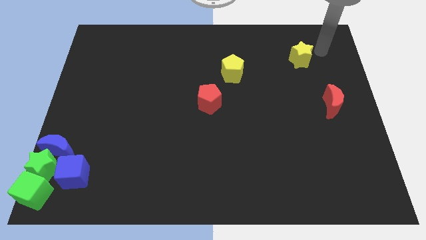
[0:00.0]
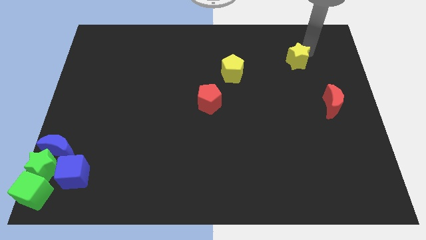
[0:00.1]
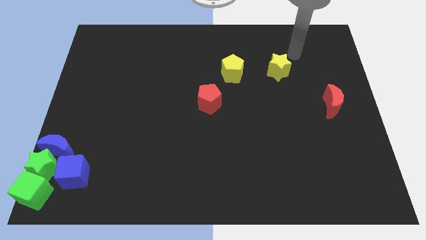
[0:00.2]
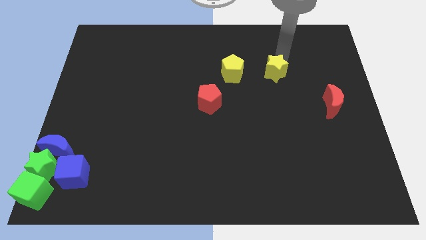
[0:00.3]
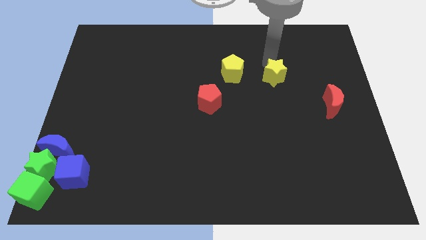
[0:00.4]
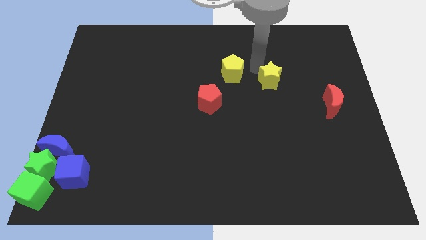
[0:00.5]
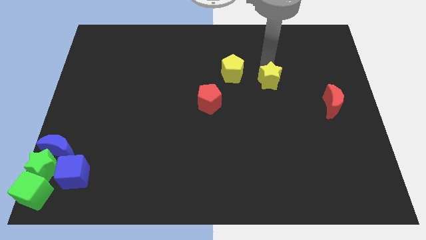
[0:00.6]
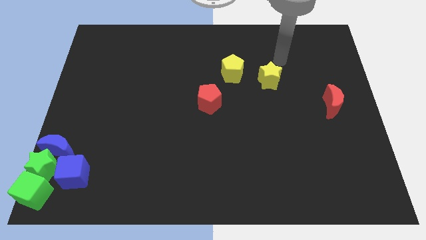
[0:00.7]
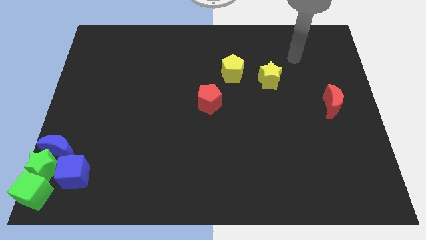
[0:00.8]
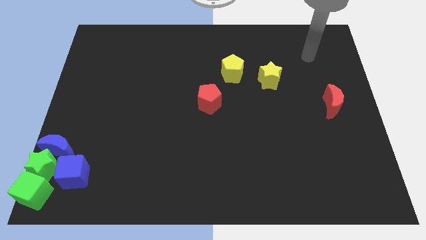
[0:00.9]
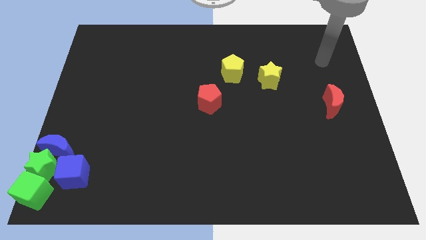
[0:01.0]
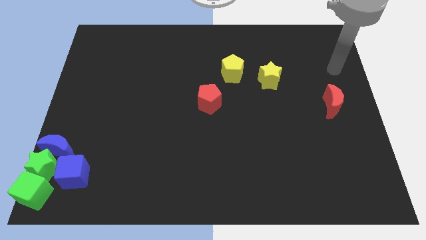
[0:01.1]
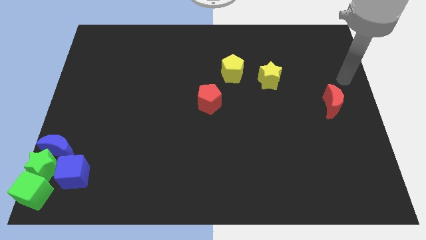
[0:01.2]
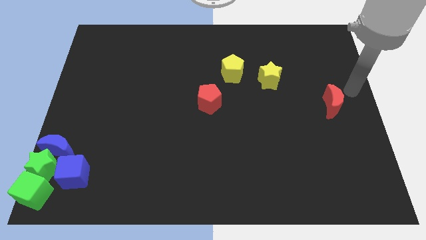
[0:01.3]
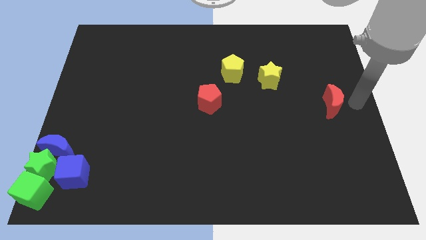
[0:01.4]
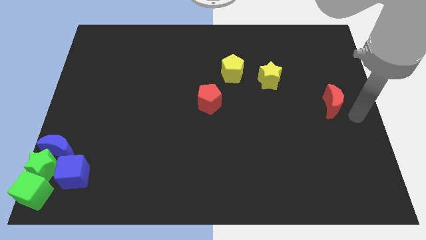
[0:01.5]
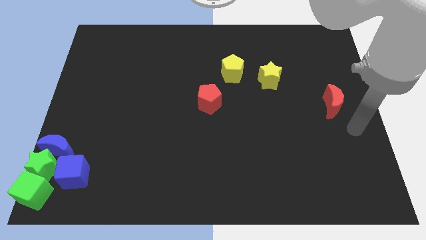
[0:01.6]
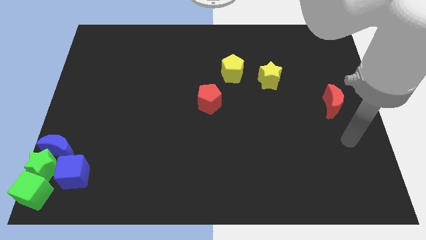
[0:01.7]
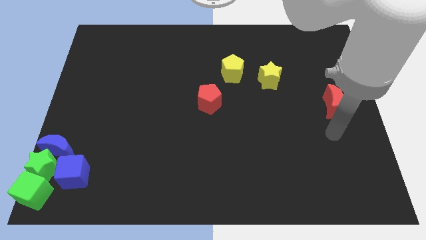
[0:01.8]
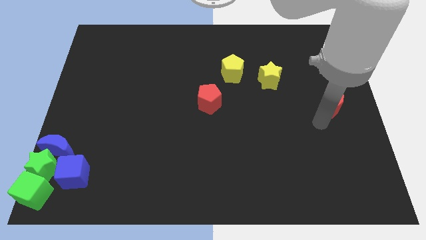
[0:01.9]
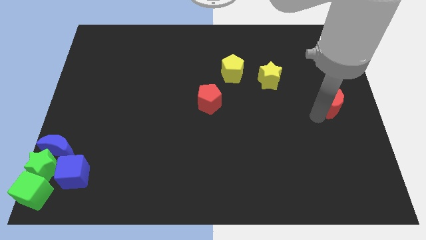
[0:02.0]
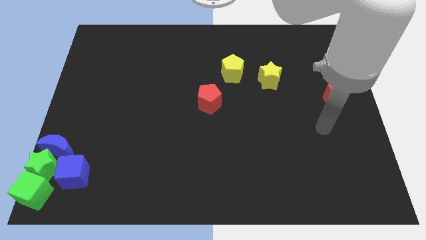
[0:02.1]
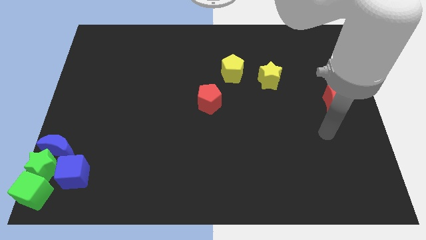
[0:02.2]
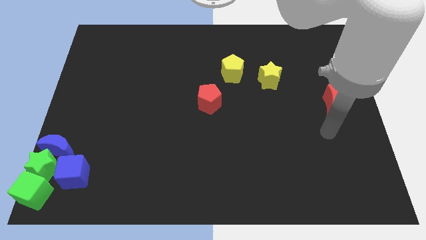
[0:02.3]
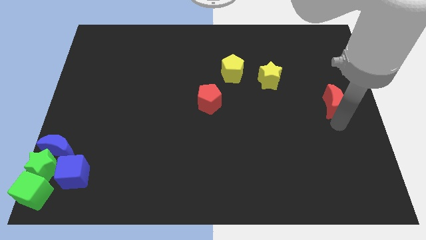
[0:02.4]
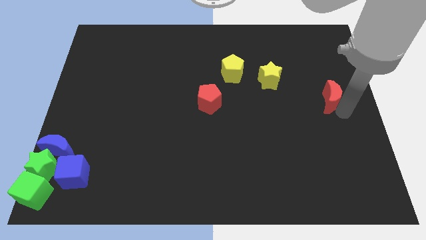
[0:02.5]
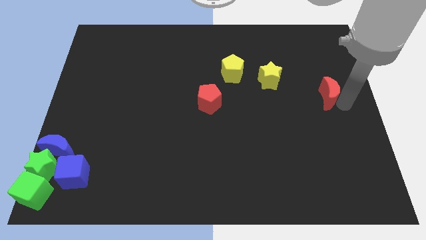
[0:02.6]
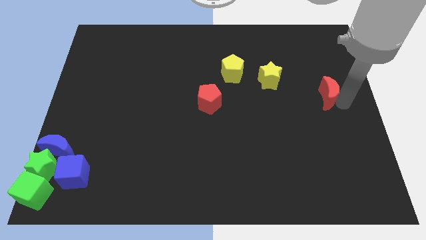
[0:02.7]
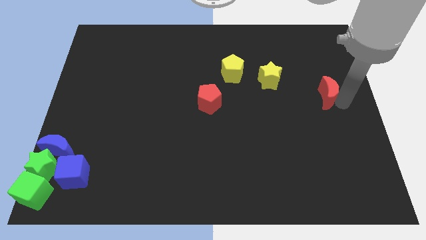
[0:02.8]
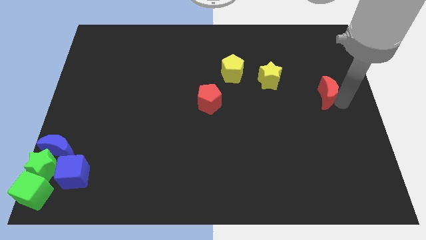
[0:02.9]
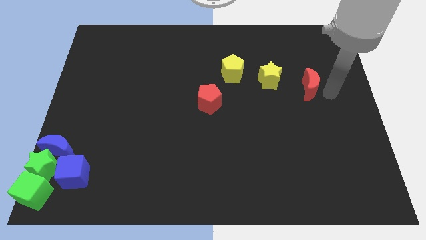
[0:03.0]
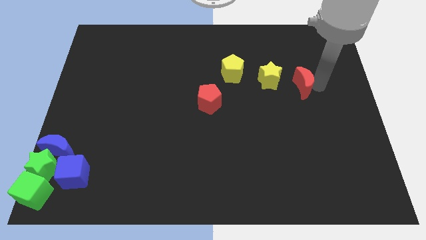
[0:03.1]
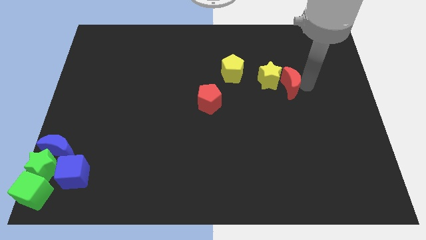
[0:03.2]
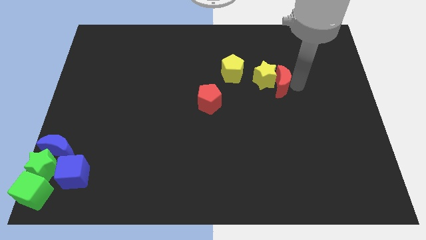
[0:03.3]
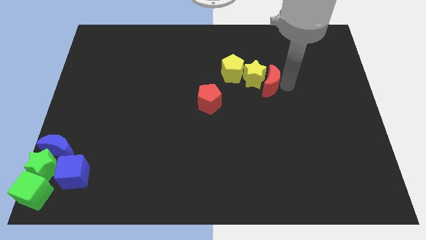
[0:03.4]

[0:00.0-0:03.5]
put the red moon into the yellow star

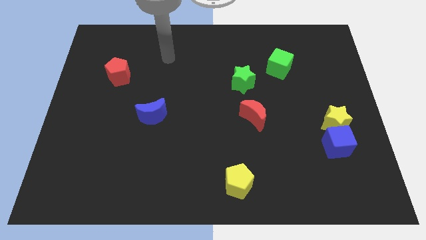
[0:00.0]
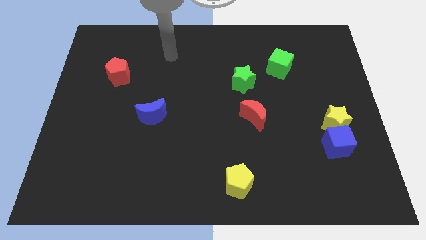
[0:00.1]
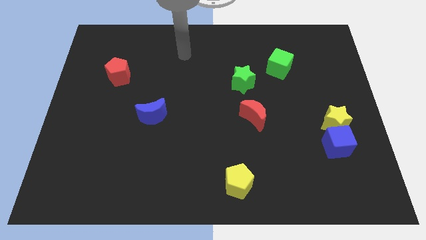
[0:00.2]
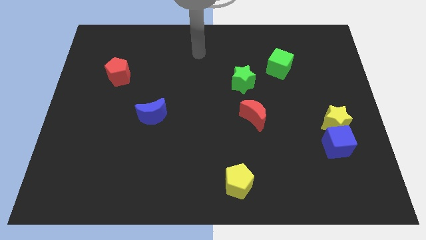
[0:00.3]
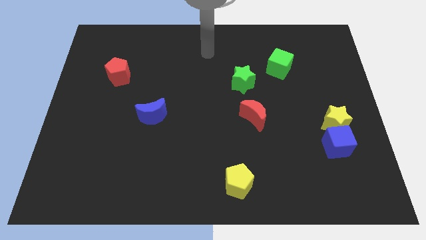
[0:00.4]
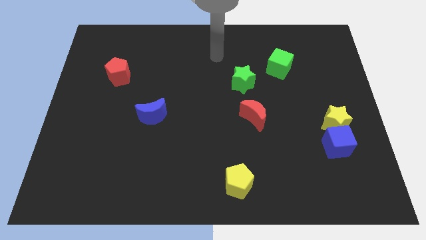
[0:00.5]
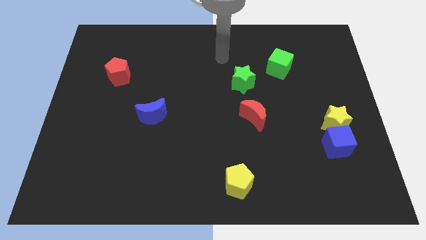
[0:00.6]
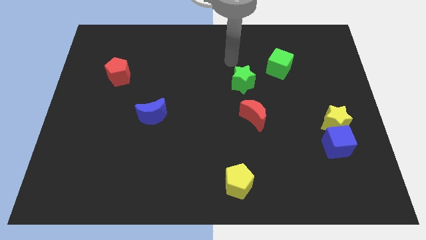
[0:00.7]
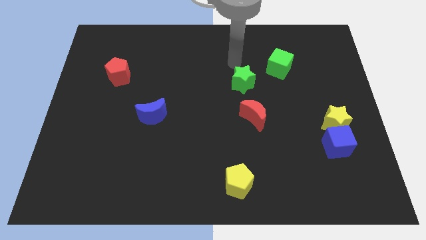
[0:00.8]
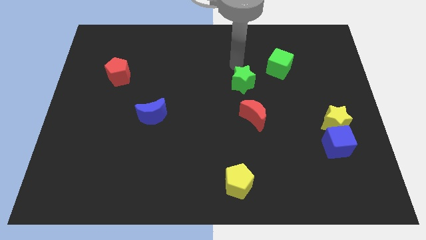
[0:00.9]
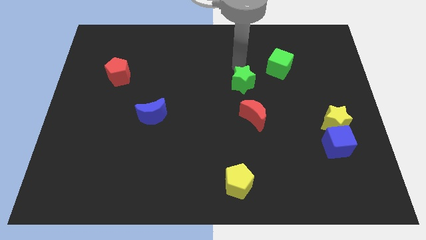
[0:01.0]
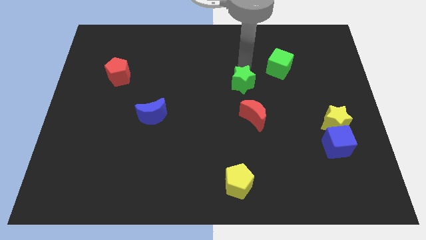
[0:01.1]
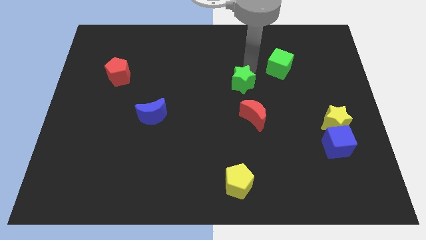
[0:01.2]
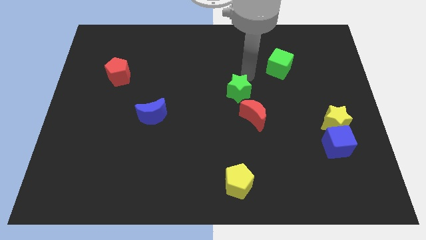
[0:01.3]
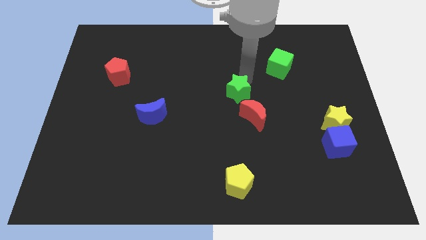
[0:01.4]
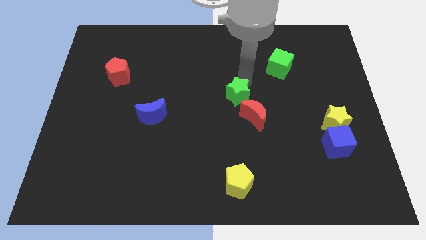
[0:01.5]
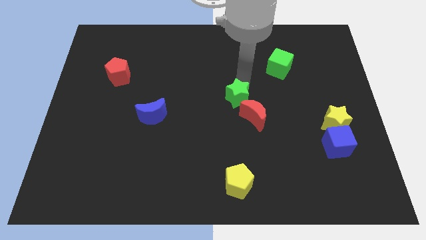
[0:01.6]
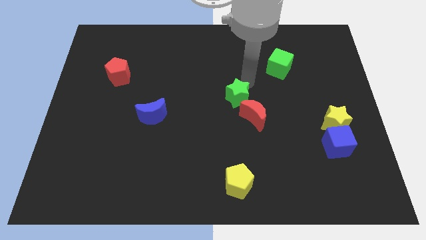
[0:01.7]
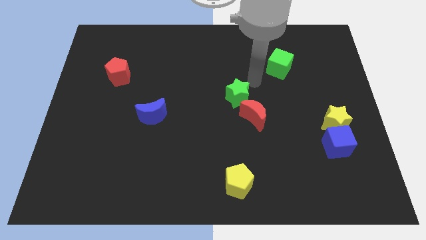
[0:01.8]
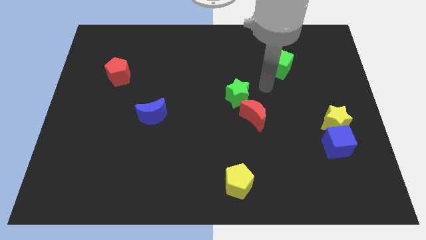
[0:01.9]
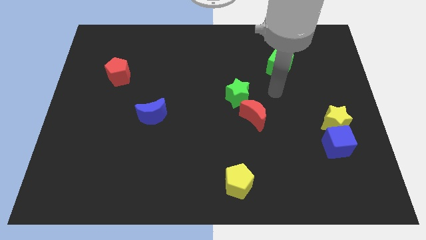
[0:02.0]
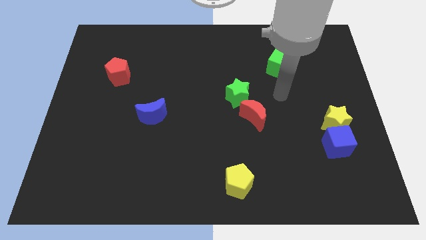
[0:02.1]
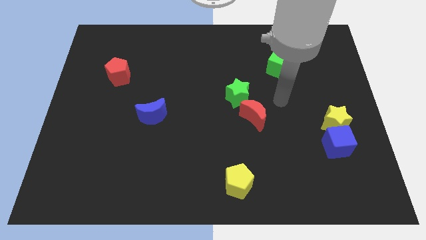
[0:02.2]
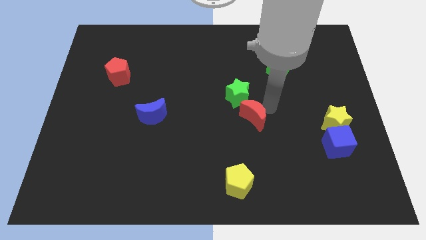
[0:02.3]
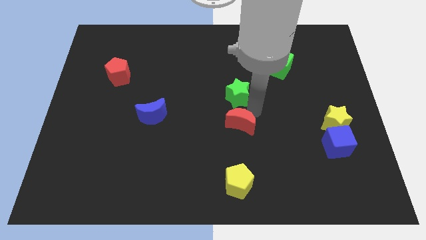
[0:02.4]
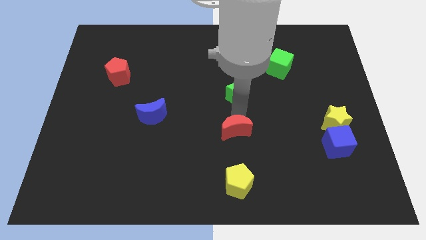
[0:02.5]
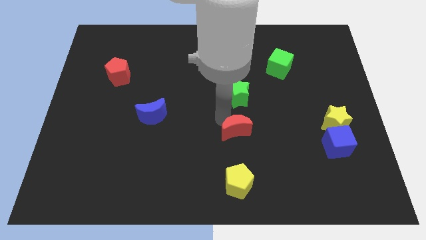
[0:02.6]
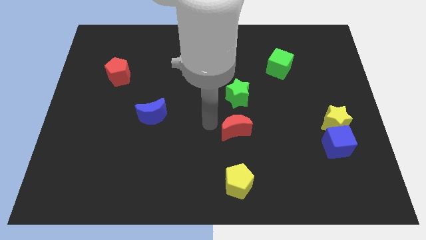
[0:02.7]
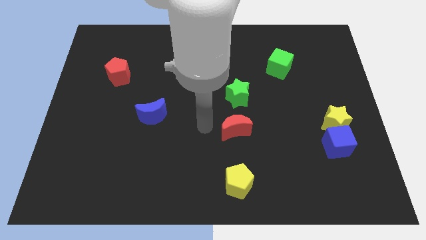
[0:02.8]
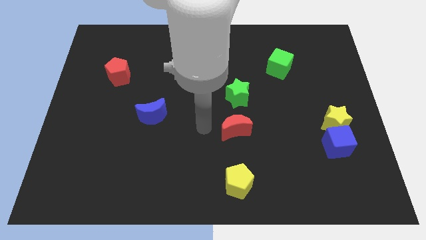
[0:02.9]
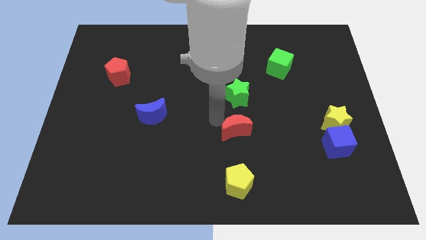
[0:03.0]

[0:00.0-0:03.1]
adjust the green star and red moon in a vertical line above the yellow pentagon

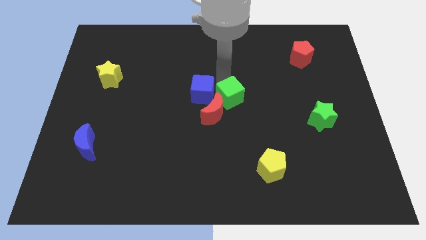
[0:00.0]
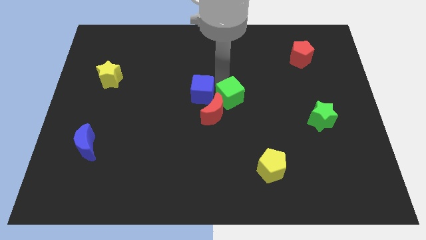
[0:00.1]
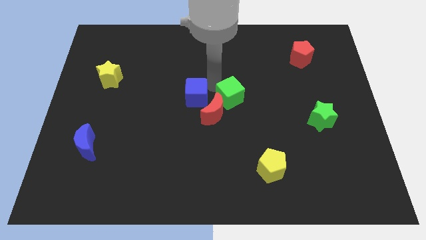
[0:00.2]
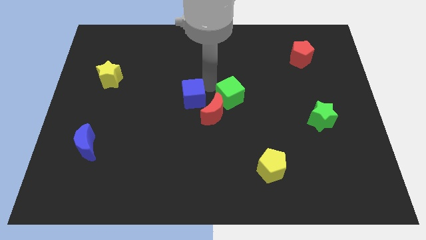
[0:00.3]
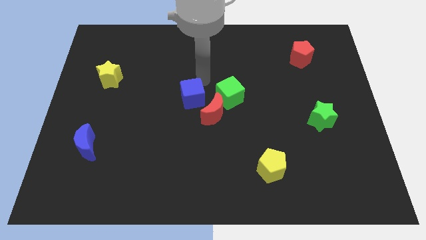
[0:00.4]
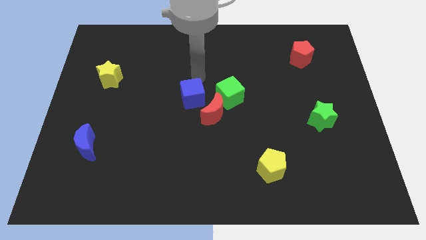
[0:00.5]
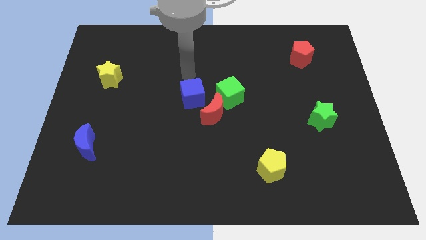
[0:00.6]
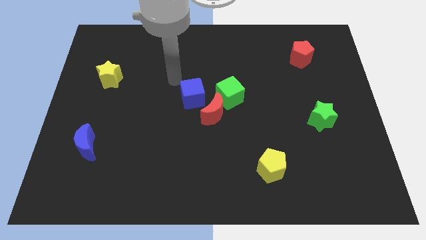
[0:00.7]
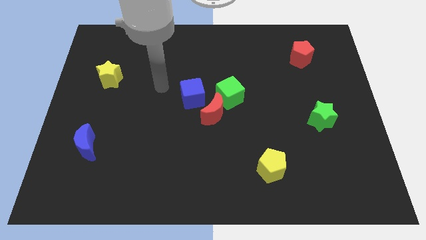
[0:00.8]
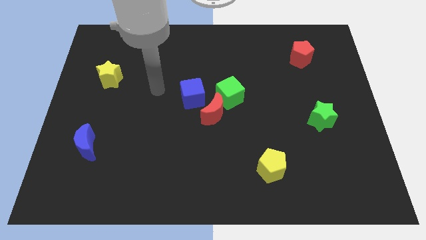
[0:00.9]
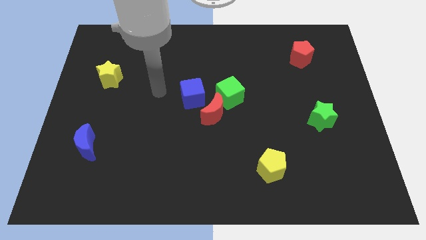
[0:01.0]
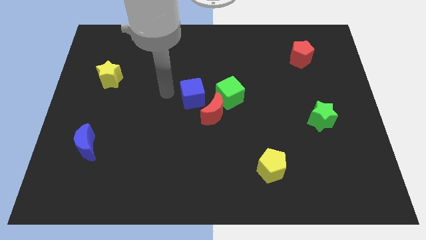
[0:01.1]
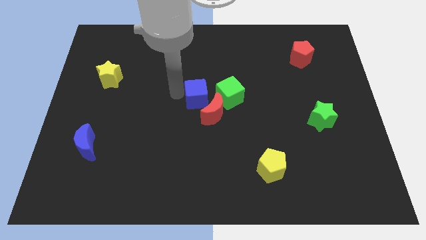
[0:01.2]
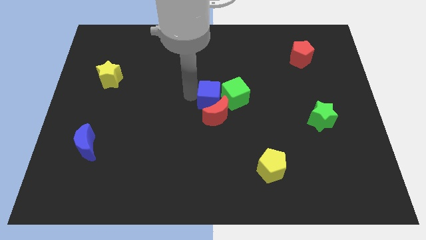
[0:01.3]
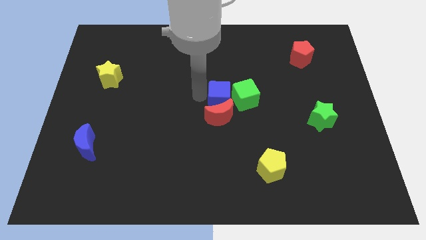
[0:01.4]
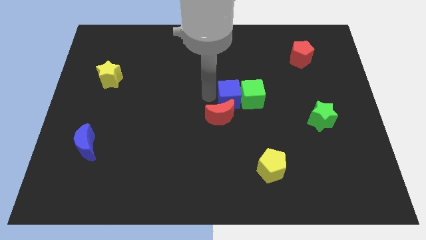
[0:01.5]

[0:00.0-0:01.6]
move the blue cube into the green cube

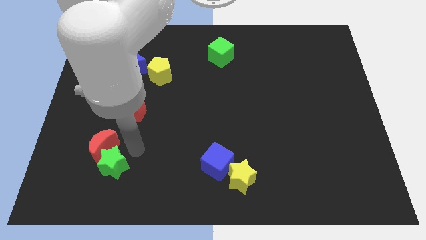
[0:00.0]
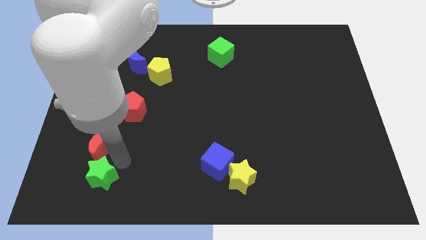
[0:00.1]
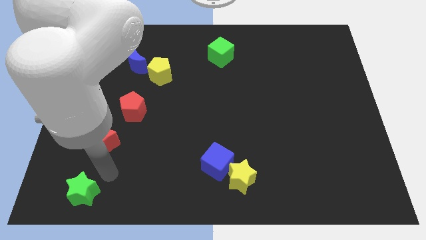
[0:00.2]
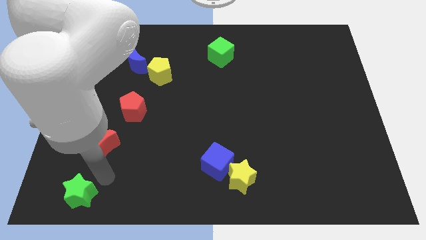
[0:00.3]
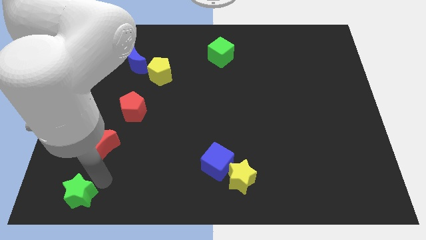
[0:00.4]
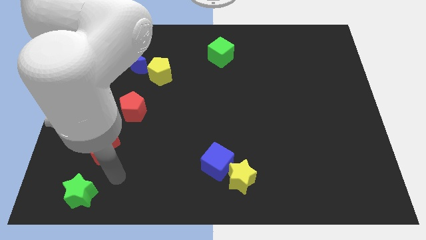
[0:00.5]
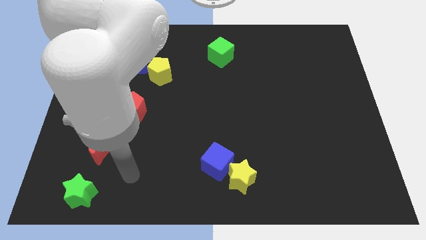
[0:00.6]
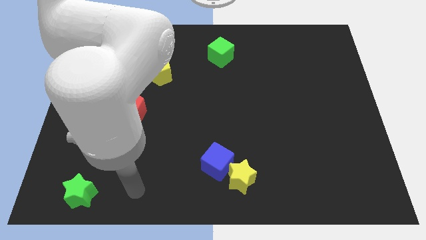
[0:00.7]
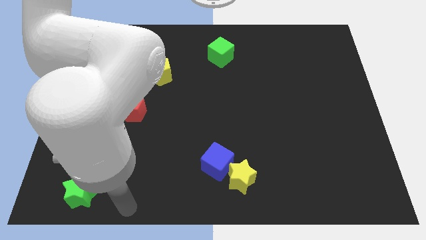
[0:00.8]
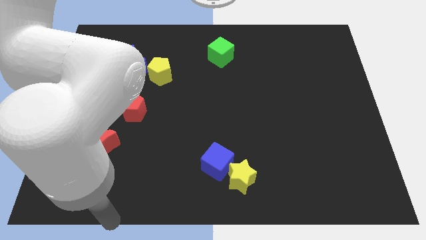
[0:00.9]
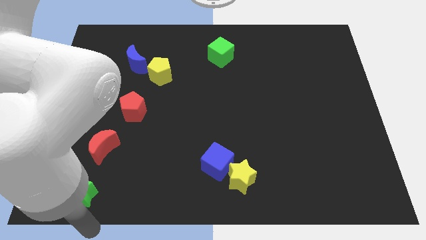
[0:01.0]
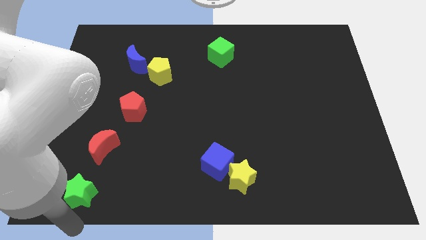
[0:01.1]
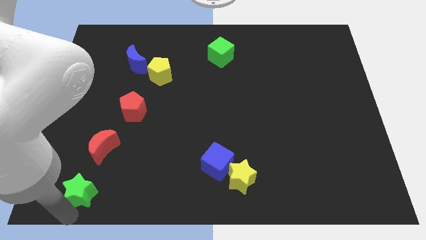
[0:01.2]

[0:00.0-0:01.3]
separate green star from red moon
